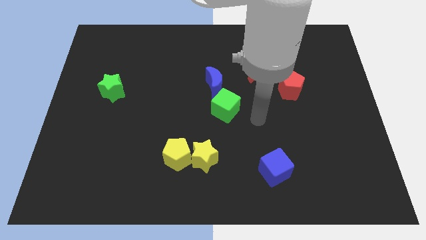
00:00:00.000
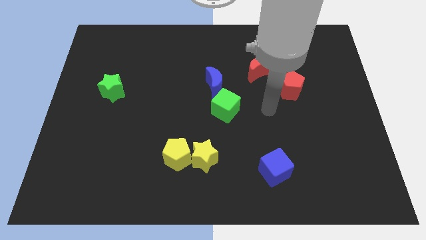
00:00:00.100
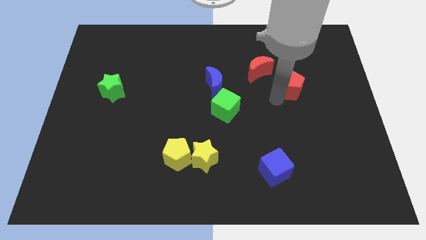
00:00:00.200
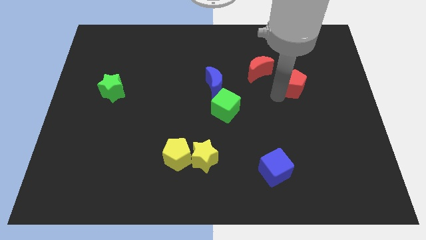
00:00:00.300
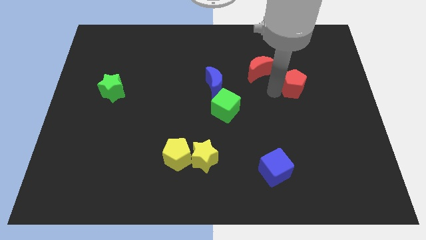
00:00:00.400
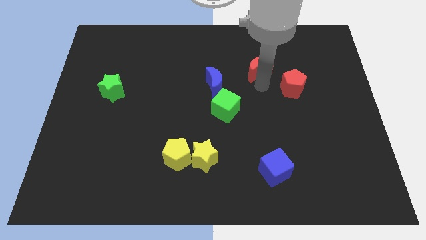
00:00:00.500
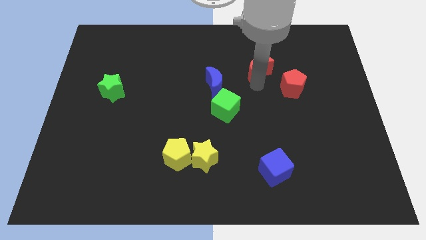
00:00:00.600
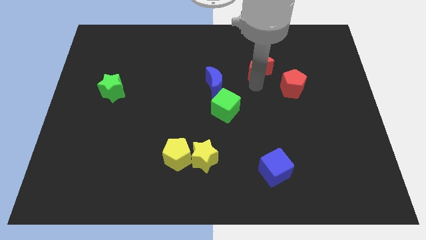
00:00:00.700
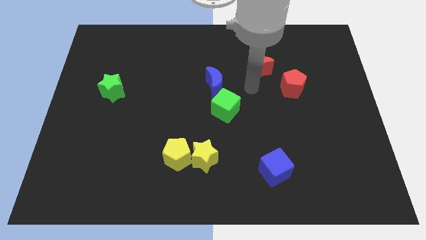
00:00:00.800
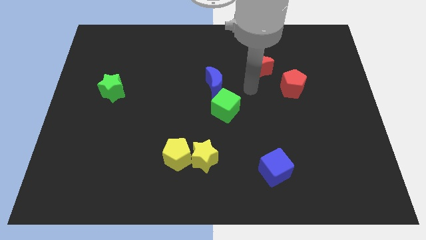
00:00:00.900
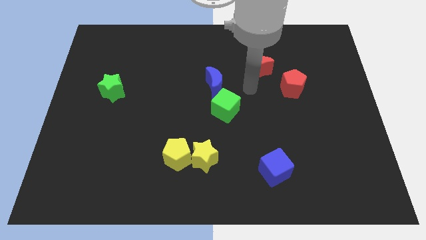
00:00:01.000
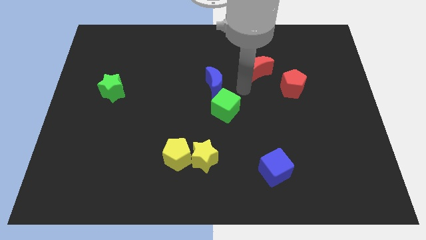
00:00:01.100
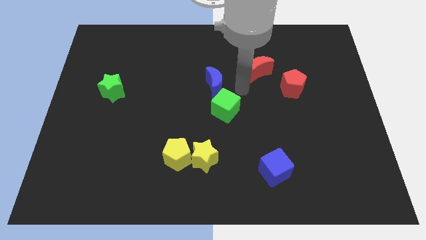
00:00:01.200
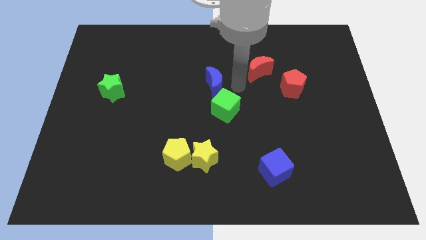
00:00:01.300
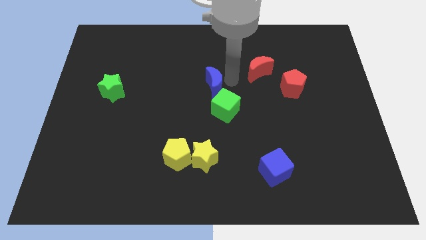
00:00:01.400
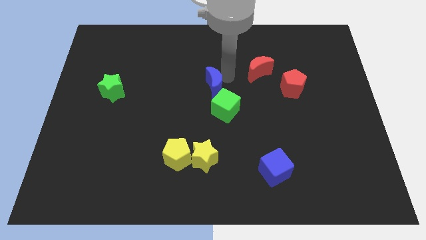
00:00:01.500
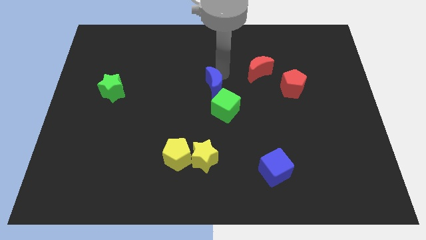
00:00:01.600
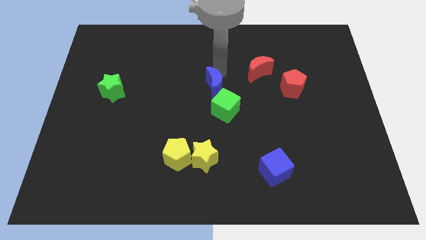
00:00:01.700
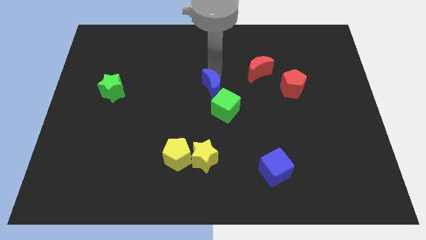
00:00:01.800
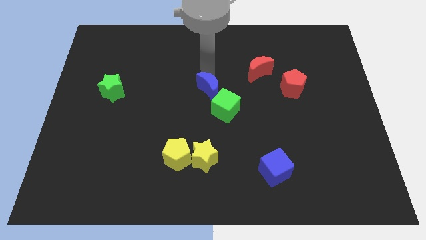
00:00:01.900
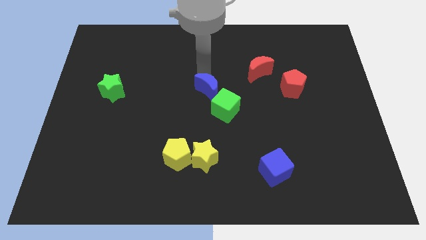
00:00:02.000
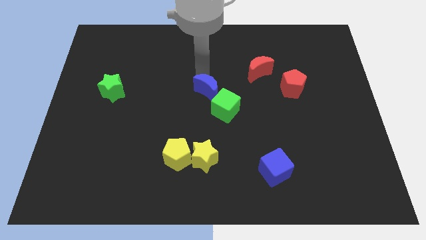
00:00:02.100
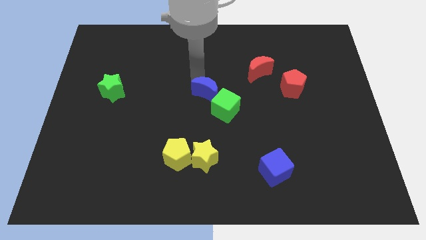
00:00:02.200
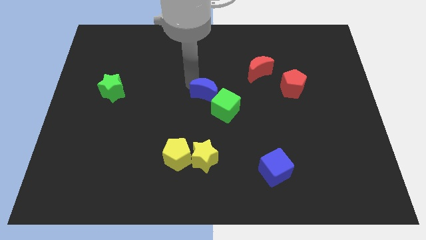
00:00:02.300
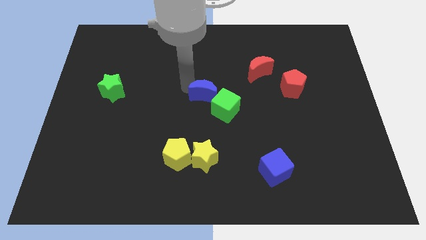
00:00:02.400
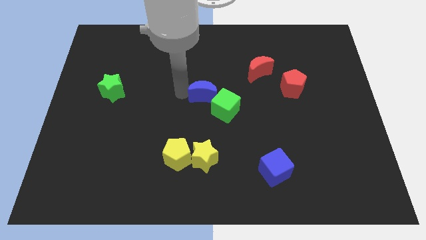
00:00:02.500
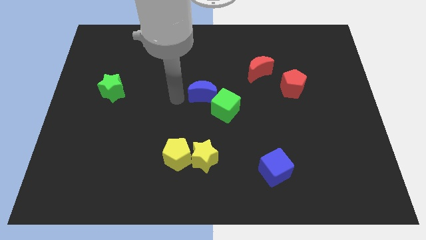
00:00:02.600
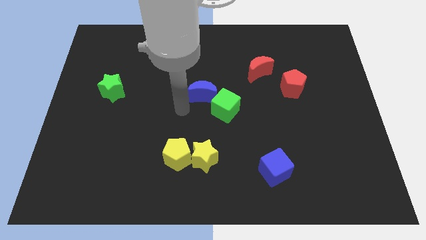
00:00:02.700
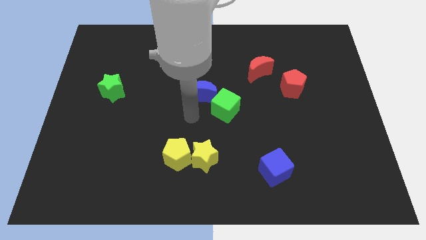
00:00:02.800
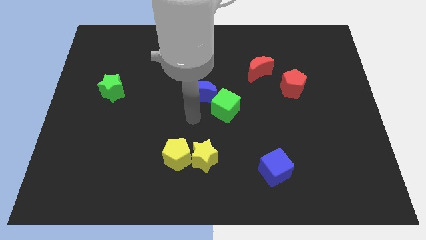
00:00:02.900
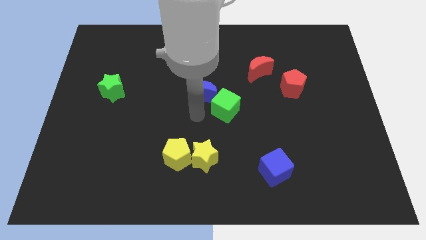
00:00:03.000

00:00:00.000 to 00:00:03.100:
place blue moon parallel to green star

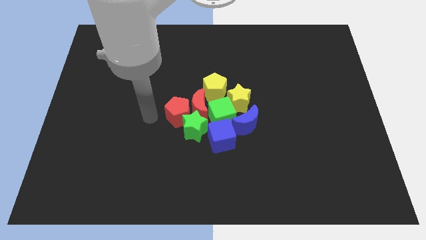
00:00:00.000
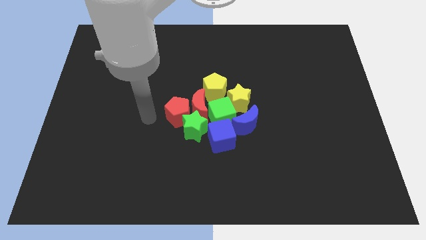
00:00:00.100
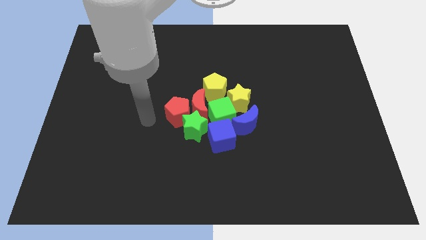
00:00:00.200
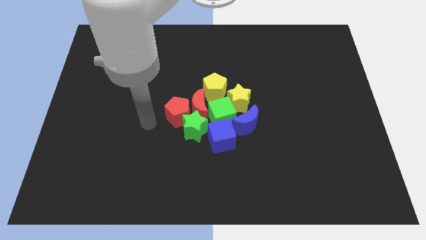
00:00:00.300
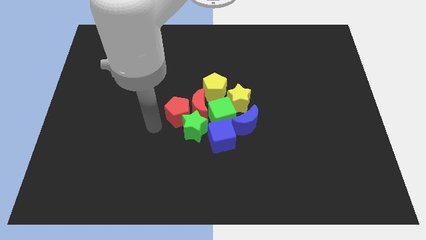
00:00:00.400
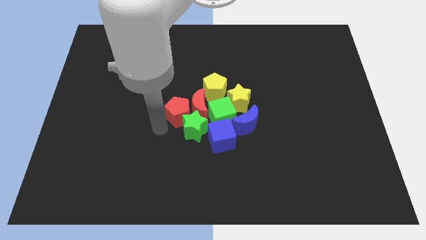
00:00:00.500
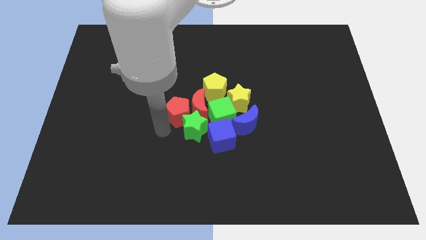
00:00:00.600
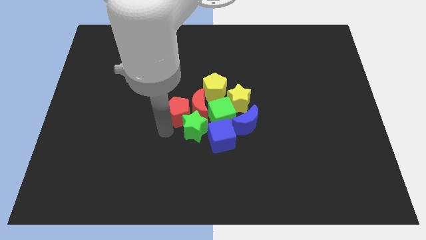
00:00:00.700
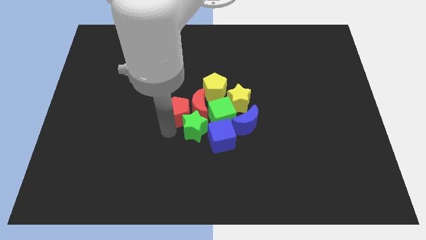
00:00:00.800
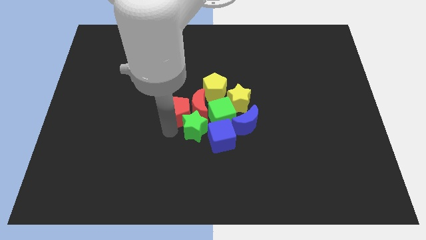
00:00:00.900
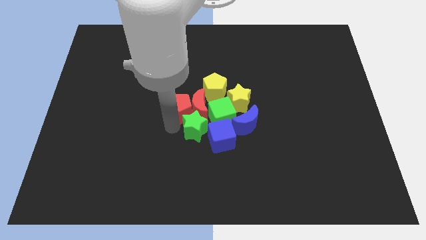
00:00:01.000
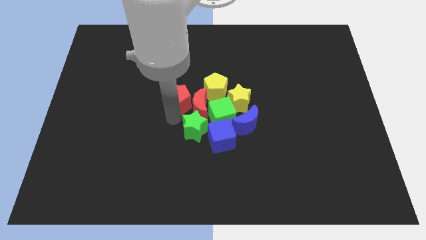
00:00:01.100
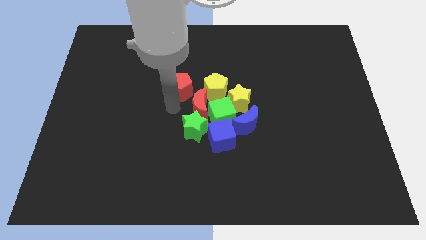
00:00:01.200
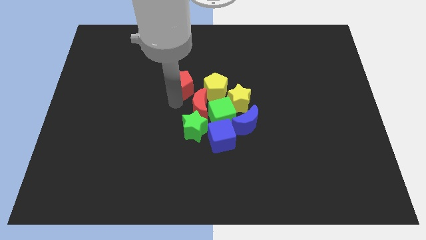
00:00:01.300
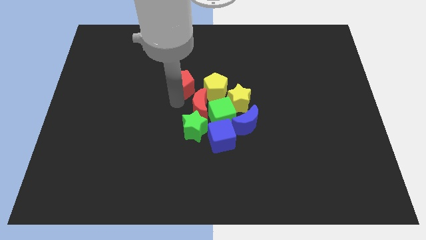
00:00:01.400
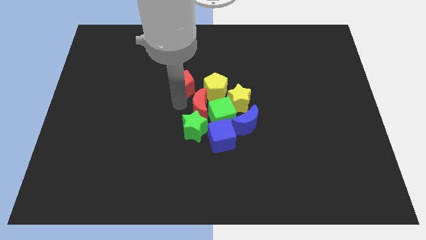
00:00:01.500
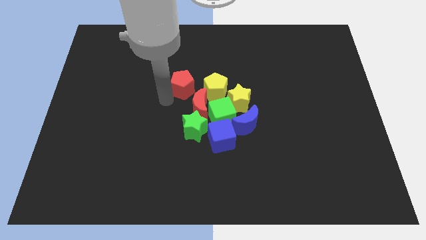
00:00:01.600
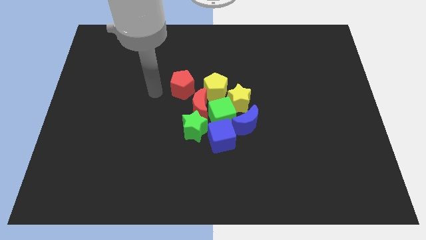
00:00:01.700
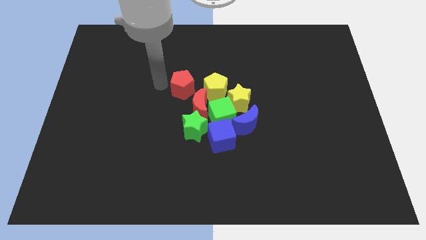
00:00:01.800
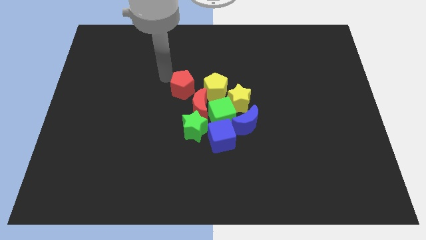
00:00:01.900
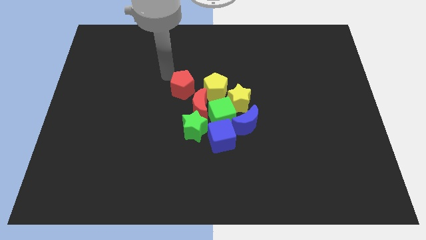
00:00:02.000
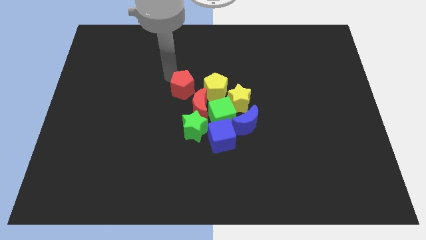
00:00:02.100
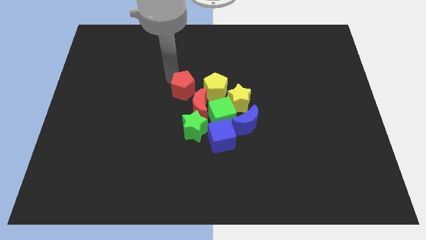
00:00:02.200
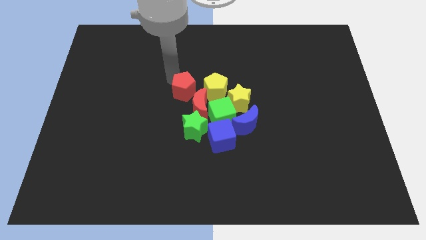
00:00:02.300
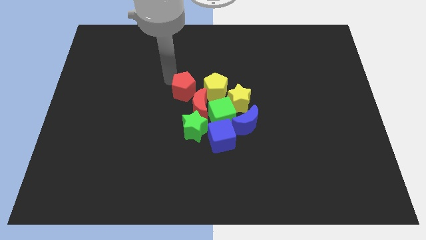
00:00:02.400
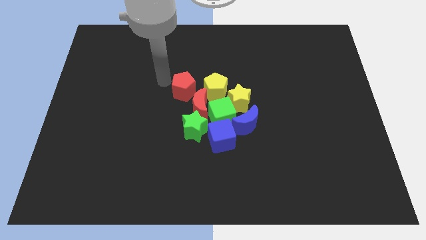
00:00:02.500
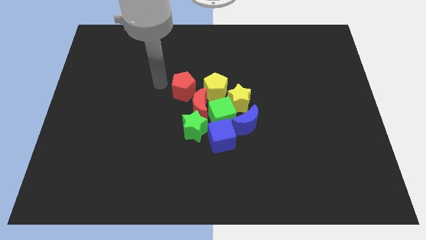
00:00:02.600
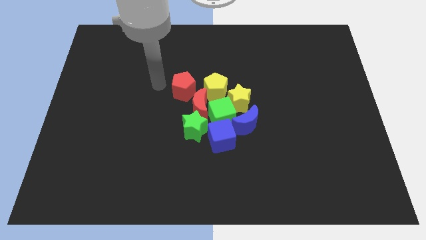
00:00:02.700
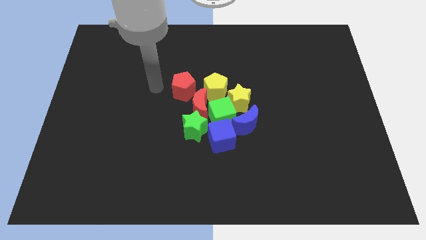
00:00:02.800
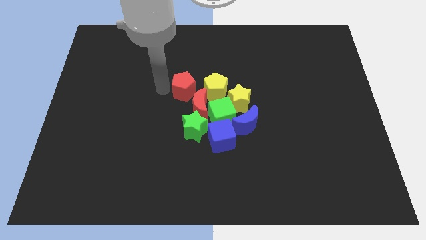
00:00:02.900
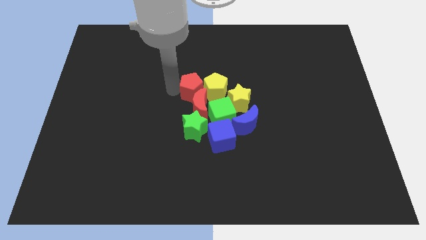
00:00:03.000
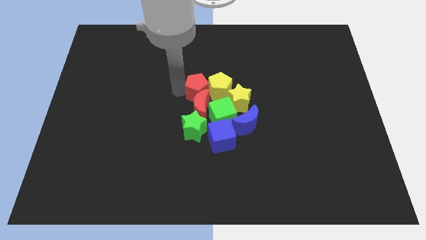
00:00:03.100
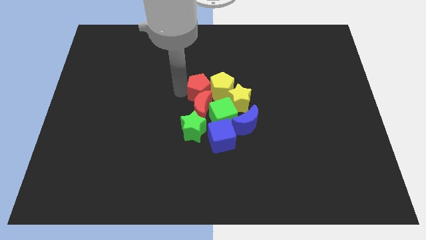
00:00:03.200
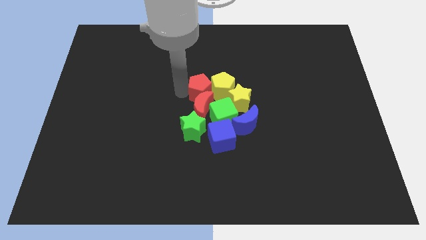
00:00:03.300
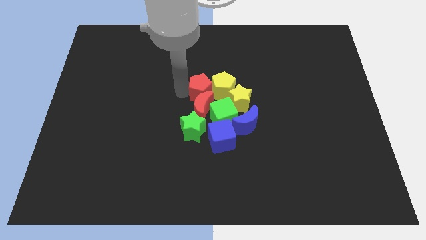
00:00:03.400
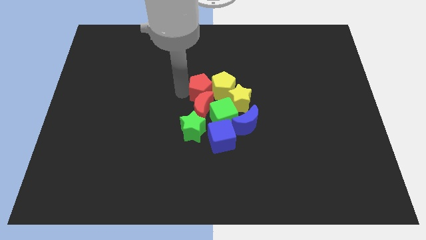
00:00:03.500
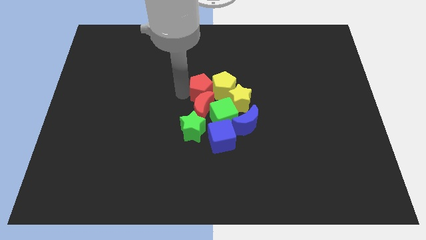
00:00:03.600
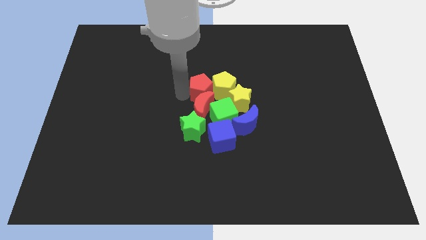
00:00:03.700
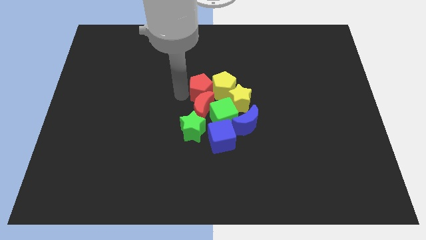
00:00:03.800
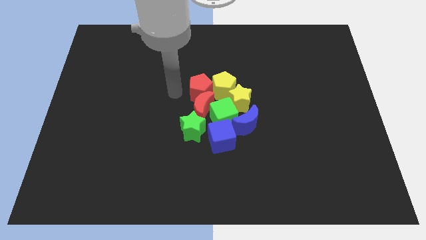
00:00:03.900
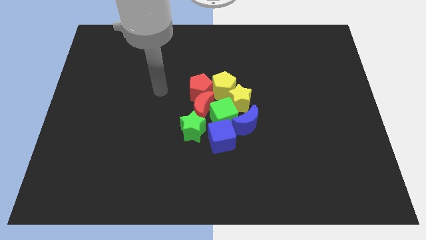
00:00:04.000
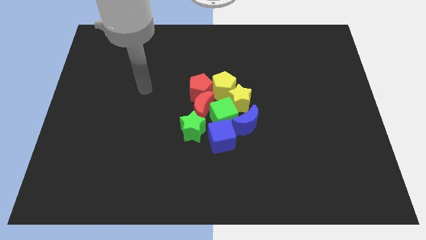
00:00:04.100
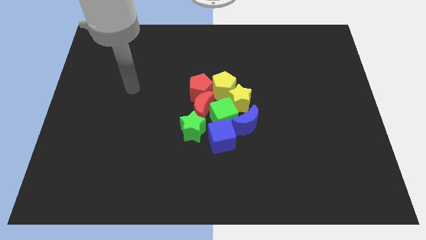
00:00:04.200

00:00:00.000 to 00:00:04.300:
move the red pentagon to the left of the yellow pentagon

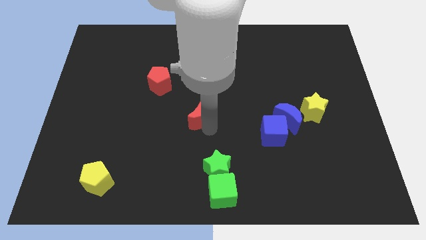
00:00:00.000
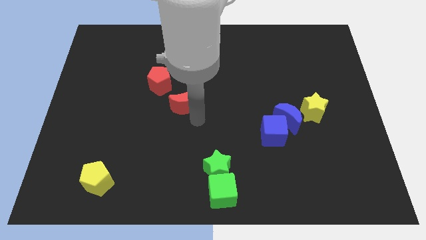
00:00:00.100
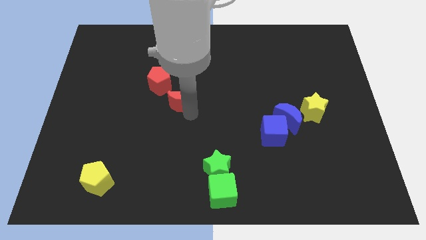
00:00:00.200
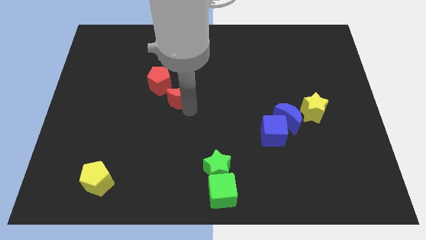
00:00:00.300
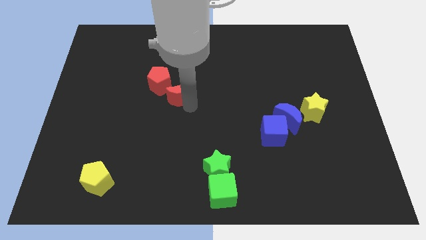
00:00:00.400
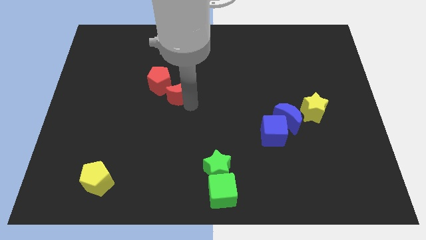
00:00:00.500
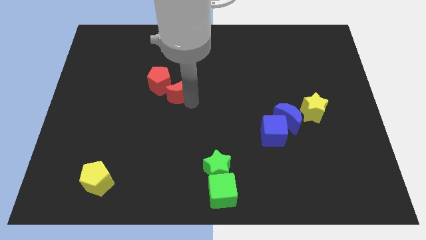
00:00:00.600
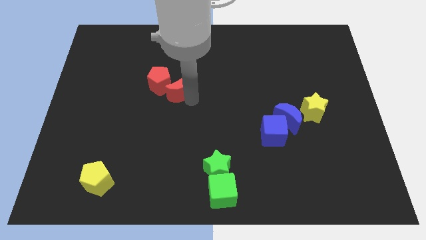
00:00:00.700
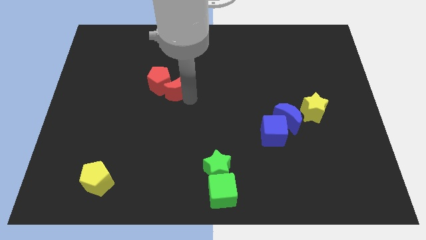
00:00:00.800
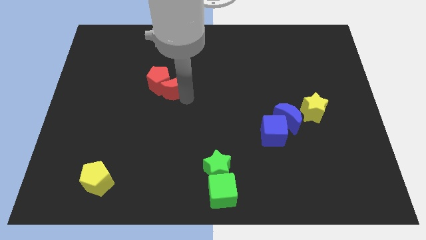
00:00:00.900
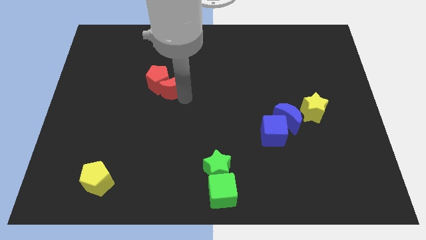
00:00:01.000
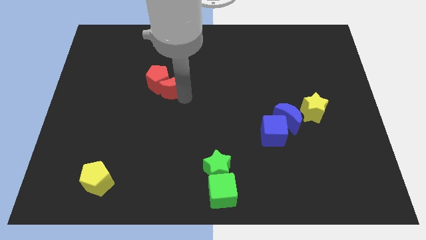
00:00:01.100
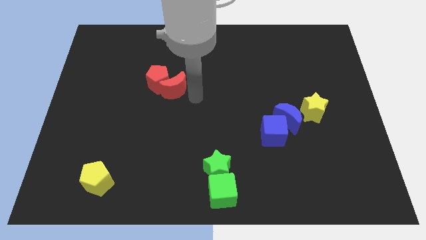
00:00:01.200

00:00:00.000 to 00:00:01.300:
move the red crescent into the red pentagon

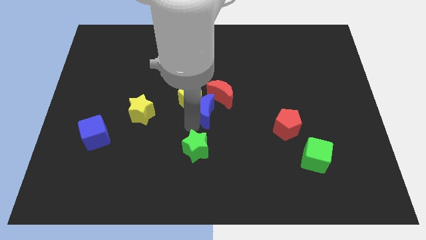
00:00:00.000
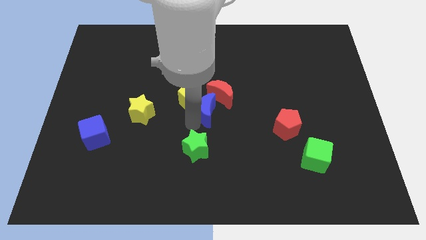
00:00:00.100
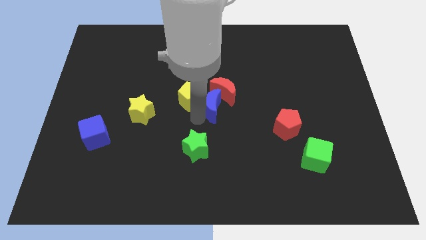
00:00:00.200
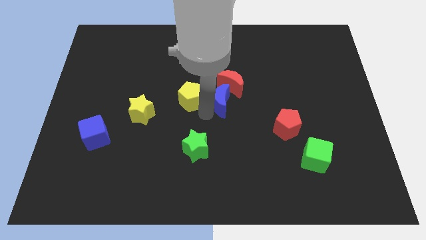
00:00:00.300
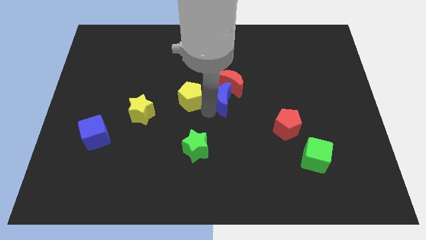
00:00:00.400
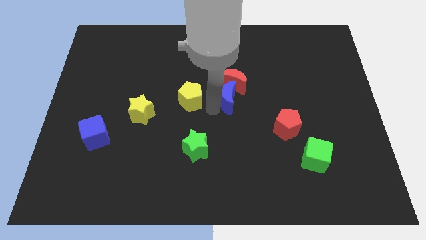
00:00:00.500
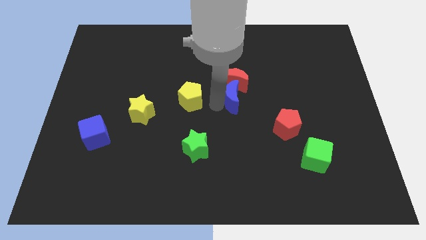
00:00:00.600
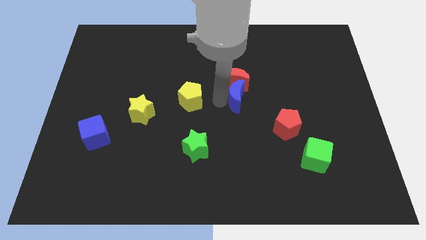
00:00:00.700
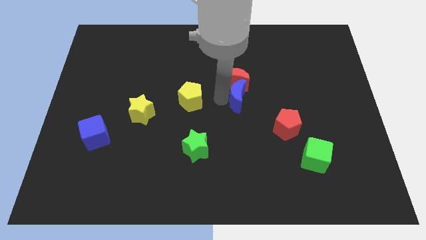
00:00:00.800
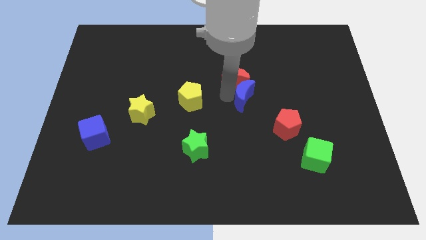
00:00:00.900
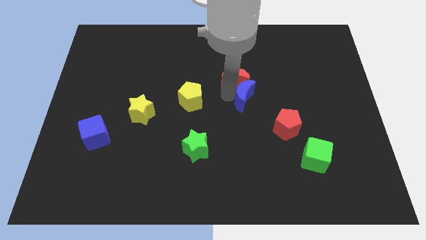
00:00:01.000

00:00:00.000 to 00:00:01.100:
move the blue crescent below the red crescent
